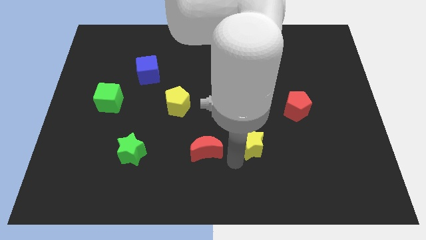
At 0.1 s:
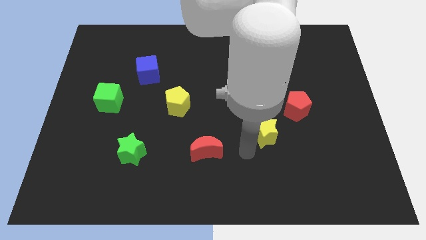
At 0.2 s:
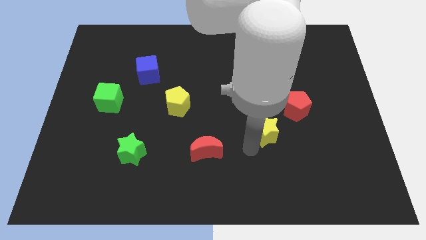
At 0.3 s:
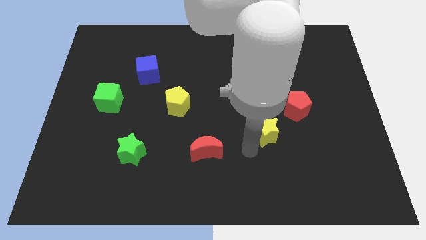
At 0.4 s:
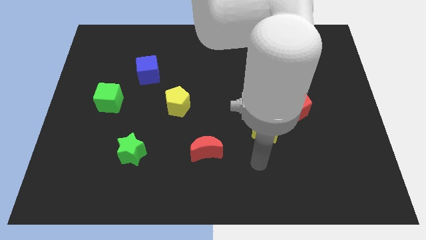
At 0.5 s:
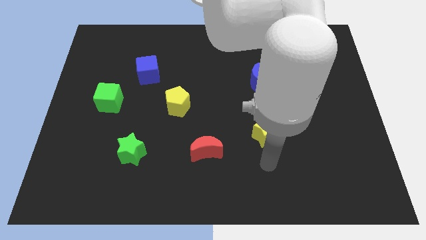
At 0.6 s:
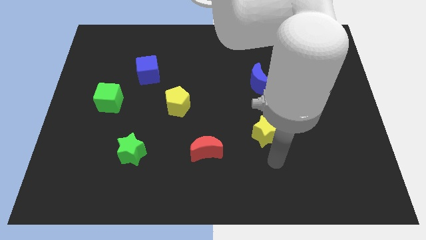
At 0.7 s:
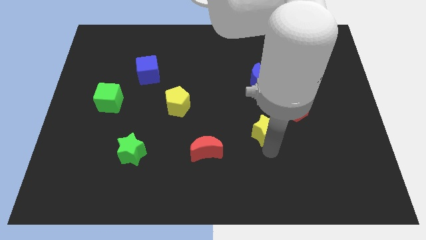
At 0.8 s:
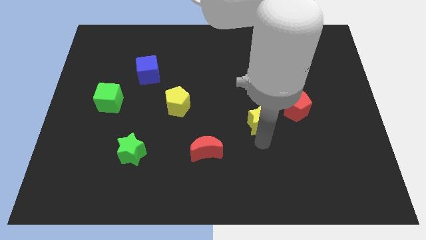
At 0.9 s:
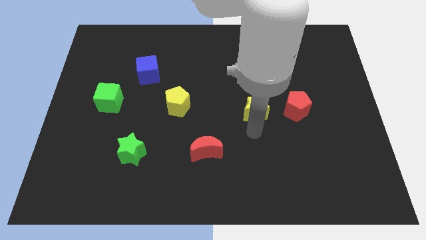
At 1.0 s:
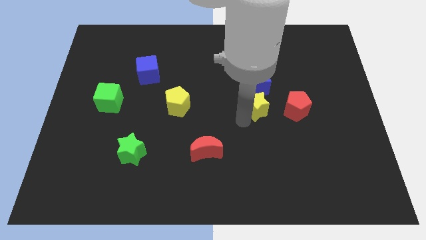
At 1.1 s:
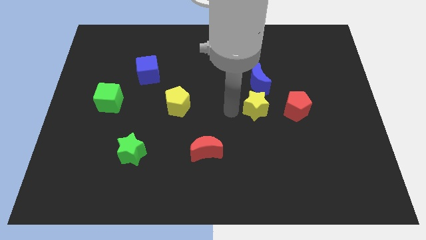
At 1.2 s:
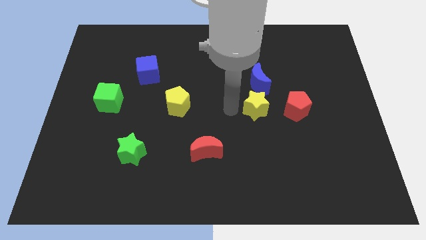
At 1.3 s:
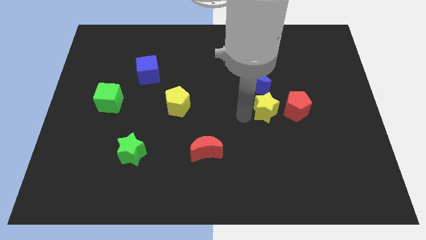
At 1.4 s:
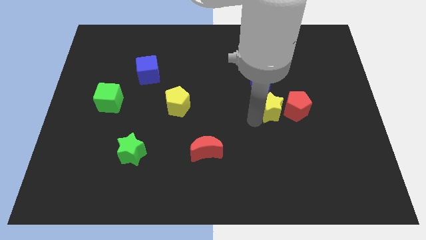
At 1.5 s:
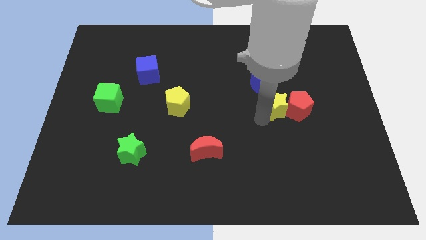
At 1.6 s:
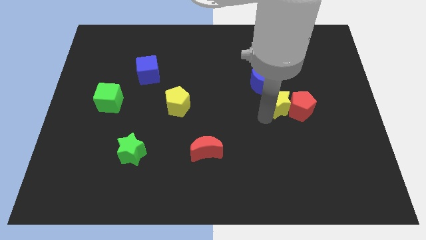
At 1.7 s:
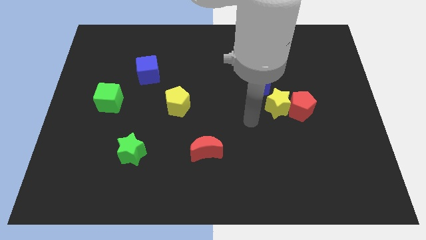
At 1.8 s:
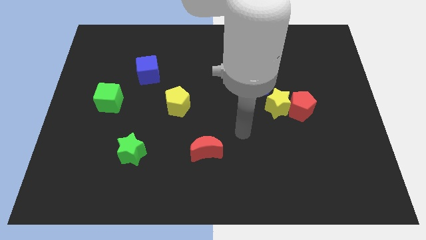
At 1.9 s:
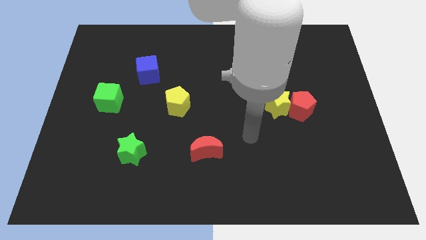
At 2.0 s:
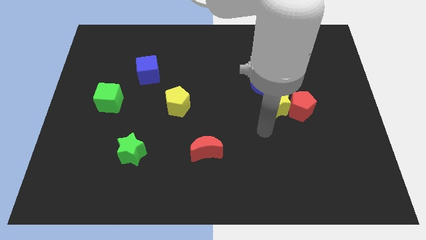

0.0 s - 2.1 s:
push yellow star close to red pentagon

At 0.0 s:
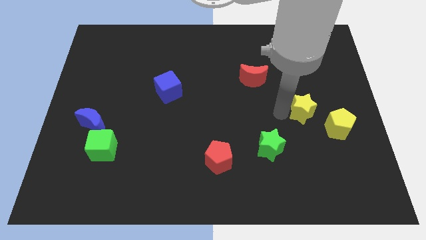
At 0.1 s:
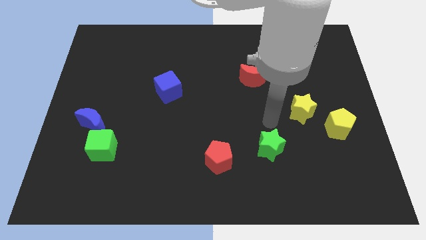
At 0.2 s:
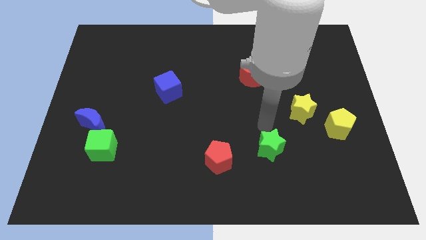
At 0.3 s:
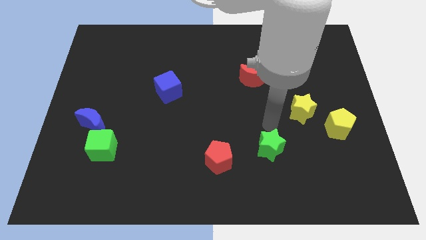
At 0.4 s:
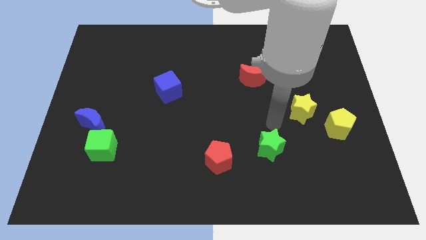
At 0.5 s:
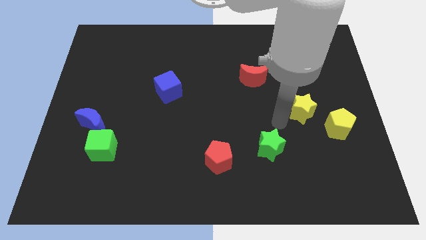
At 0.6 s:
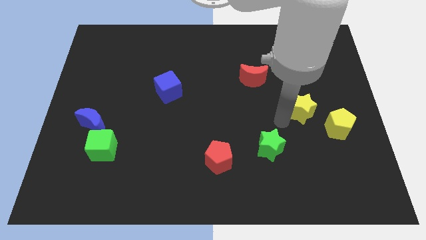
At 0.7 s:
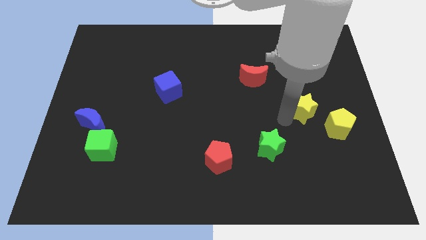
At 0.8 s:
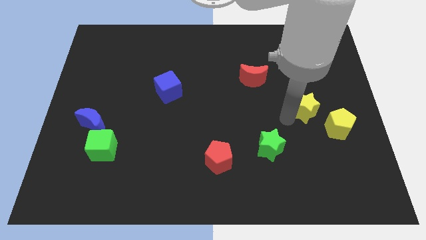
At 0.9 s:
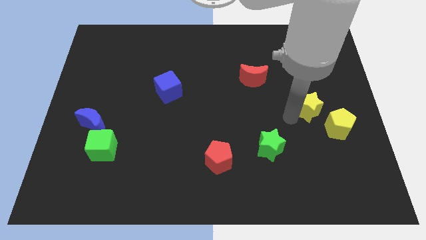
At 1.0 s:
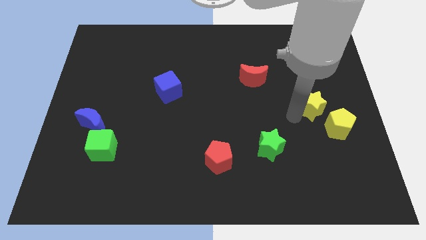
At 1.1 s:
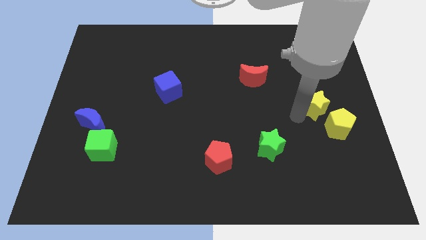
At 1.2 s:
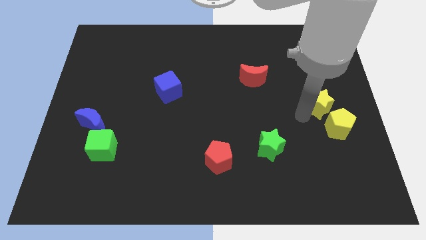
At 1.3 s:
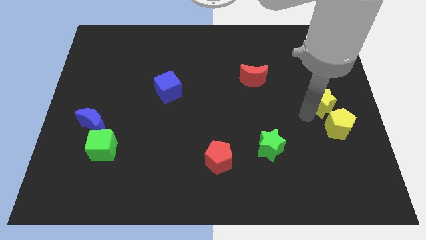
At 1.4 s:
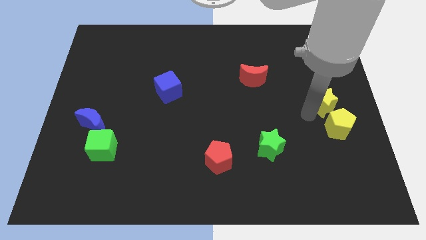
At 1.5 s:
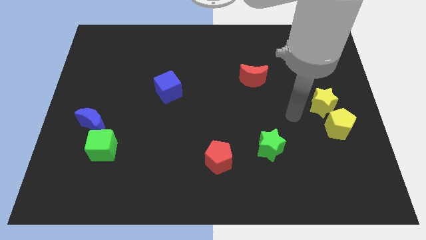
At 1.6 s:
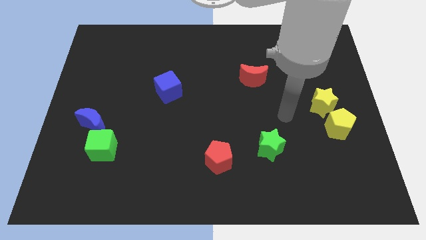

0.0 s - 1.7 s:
place the yellow star to the top of the yellow pentagon

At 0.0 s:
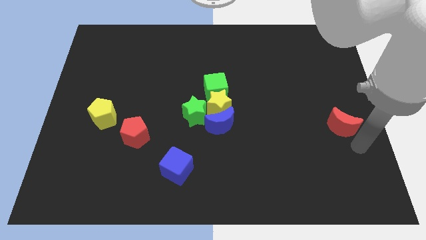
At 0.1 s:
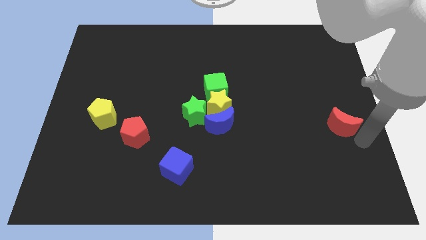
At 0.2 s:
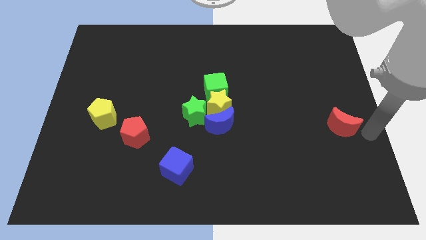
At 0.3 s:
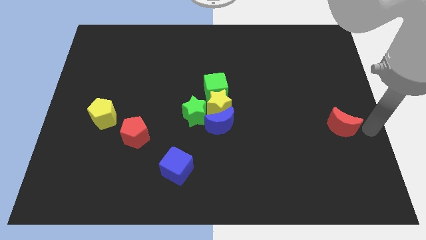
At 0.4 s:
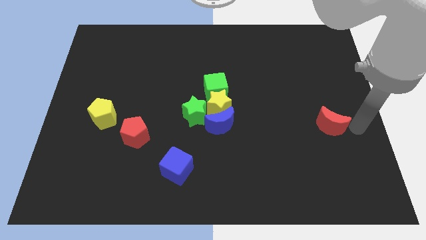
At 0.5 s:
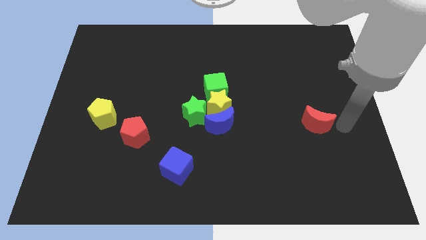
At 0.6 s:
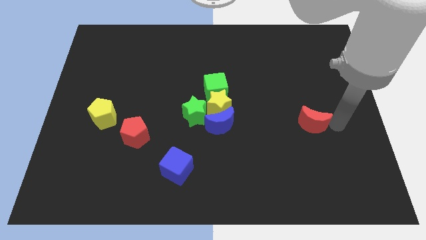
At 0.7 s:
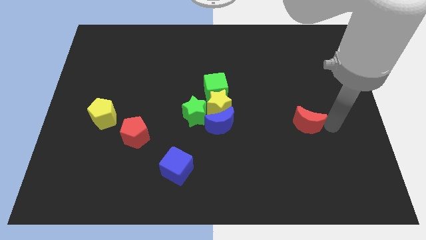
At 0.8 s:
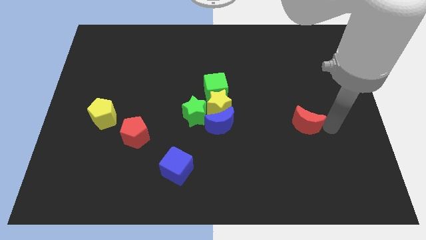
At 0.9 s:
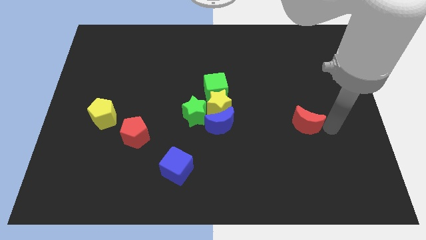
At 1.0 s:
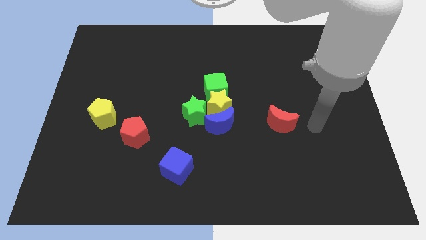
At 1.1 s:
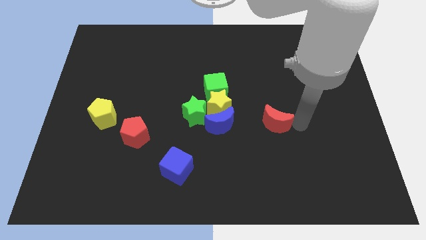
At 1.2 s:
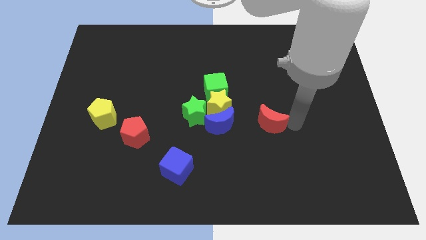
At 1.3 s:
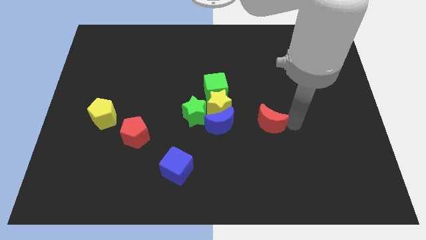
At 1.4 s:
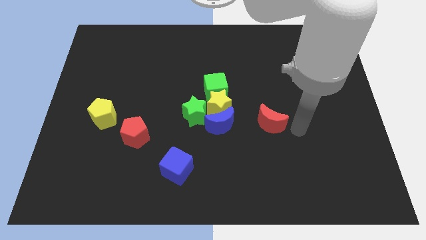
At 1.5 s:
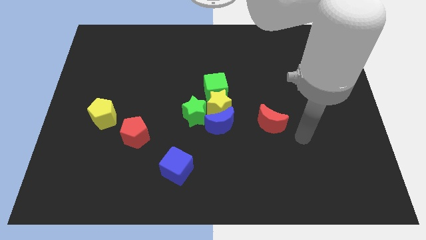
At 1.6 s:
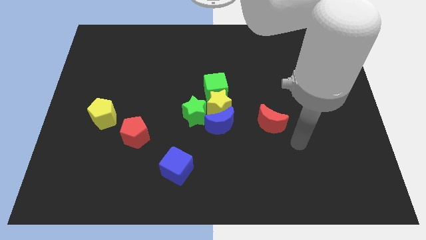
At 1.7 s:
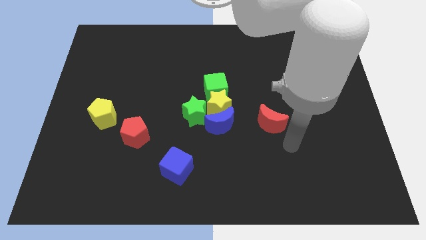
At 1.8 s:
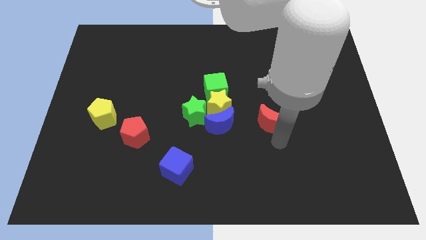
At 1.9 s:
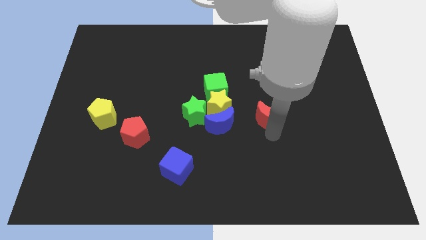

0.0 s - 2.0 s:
place the red moon to the right of the blue moon

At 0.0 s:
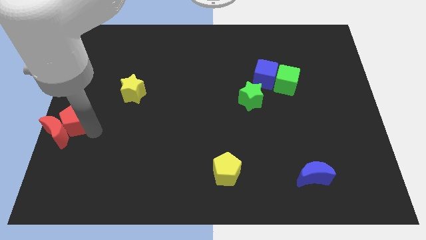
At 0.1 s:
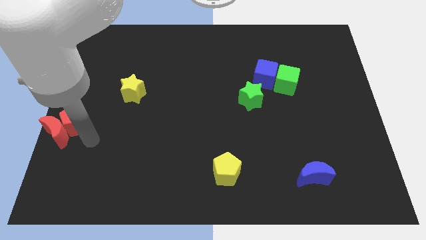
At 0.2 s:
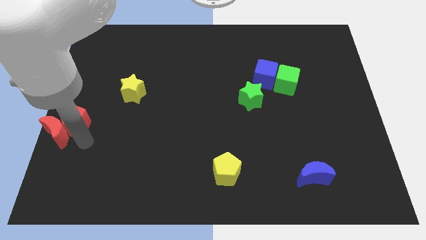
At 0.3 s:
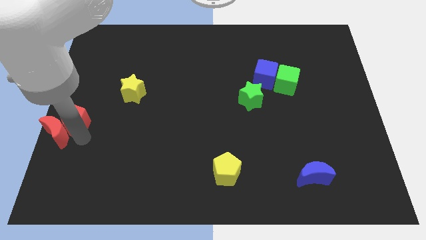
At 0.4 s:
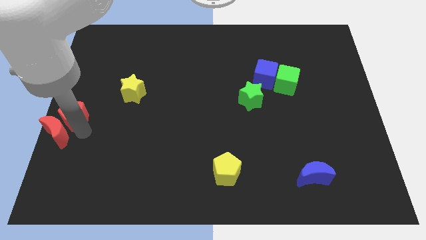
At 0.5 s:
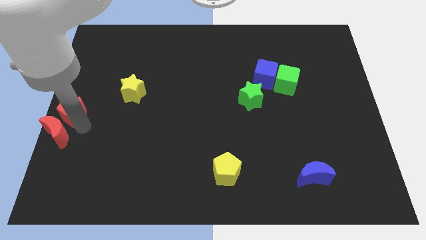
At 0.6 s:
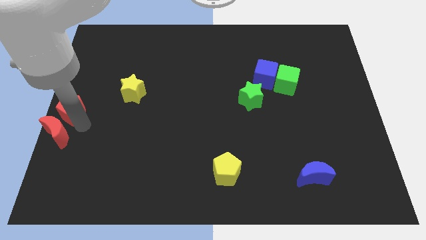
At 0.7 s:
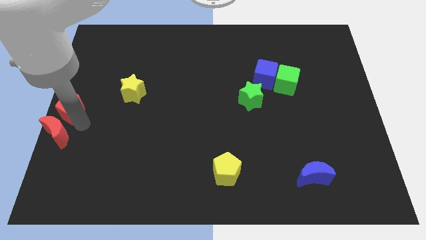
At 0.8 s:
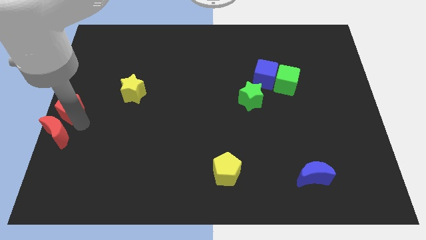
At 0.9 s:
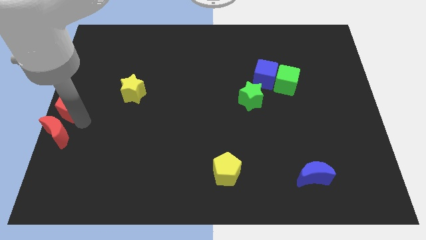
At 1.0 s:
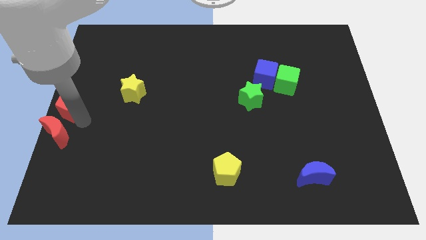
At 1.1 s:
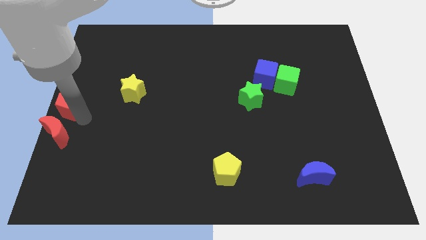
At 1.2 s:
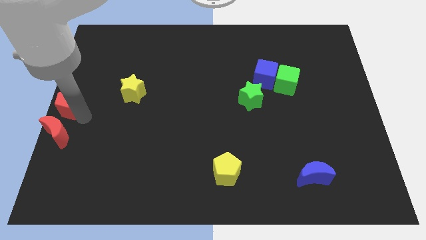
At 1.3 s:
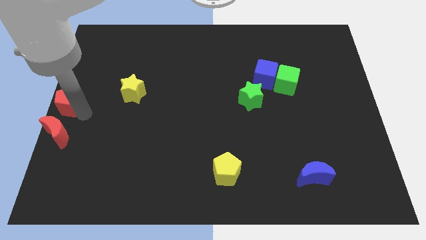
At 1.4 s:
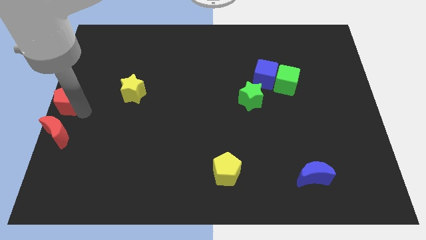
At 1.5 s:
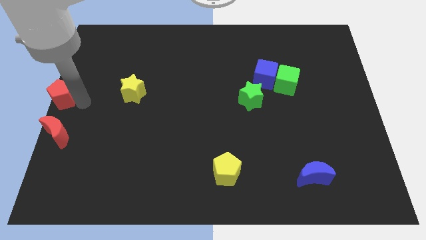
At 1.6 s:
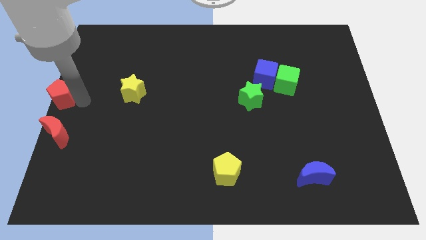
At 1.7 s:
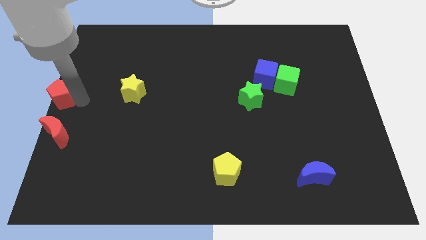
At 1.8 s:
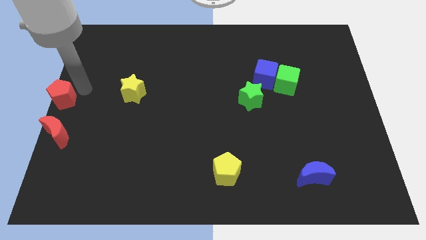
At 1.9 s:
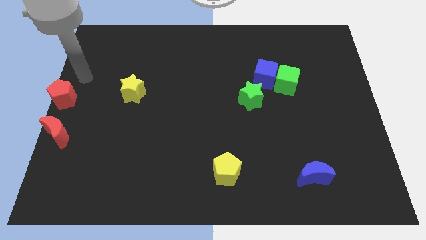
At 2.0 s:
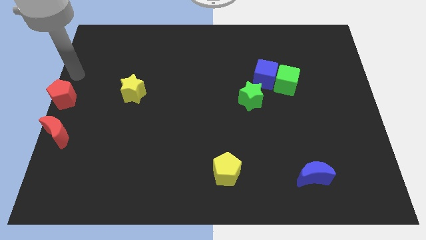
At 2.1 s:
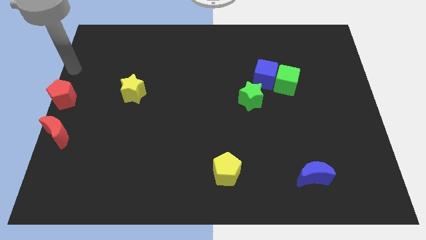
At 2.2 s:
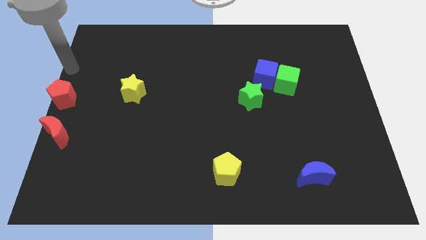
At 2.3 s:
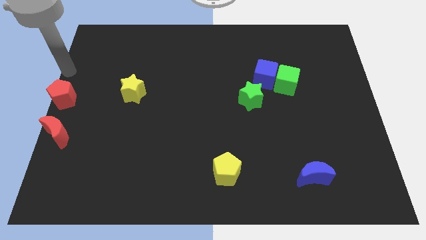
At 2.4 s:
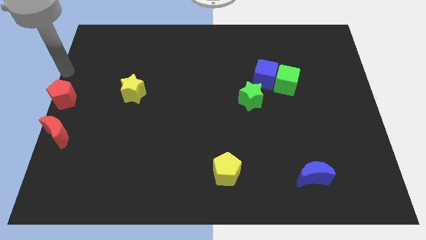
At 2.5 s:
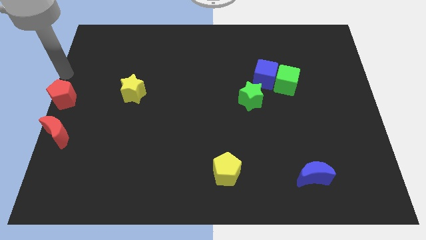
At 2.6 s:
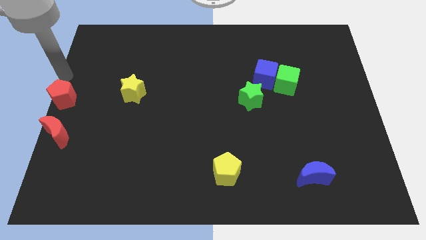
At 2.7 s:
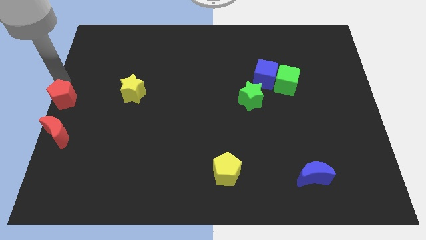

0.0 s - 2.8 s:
place the red pentagon above the red moon

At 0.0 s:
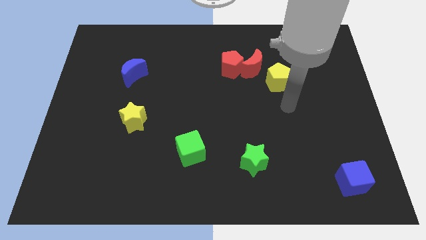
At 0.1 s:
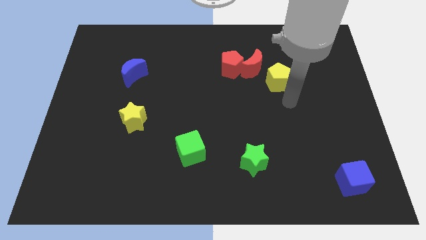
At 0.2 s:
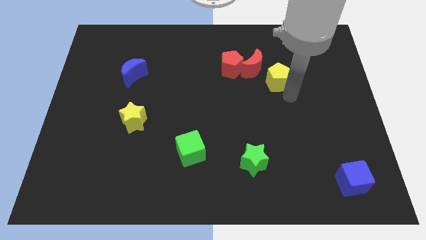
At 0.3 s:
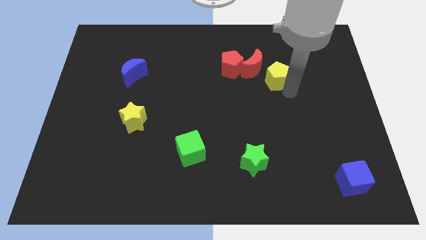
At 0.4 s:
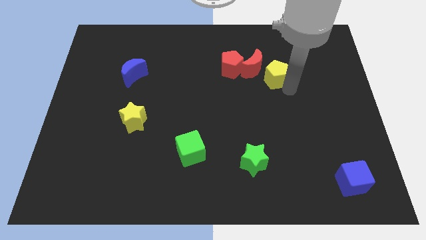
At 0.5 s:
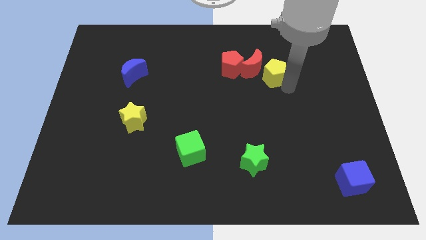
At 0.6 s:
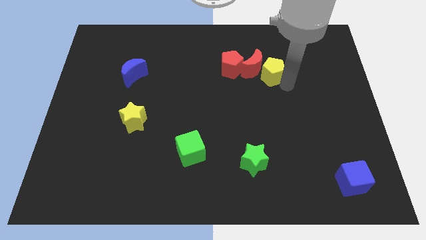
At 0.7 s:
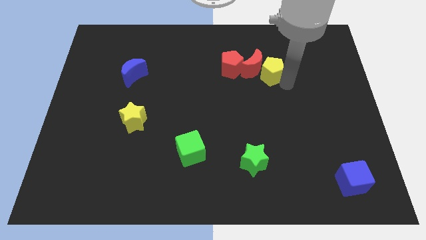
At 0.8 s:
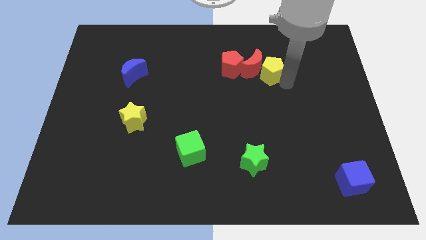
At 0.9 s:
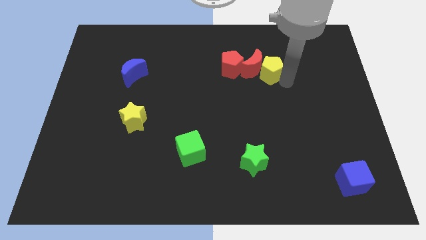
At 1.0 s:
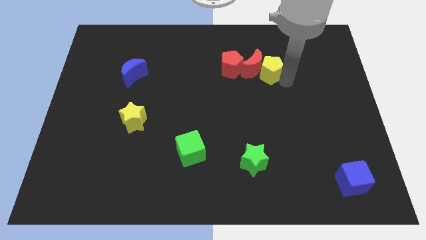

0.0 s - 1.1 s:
push yellow pentagon into the red moon
